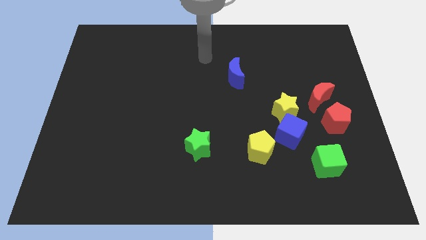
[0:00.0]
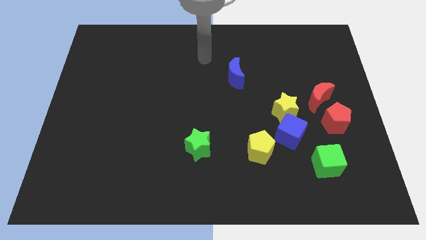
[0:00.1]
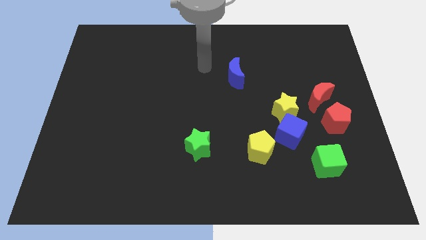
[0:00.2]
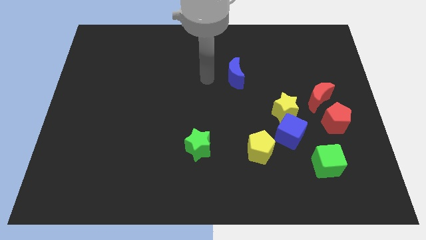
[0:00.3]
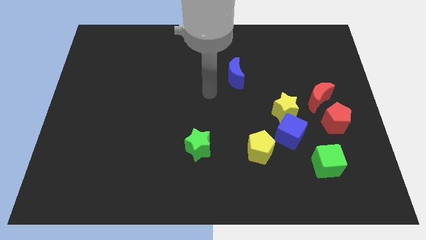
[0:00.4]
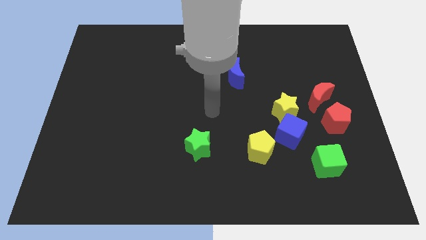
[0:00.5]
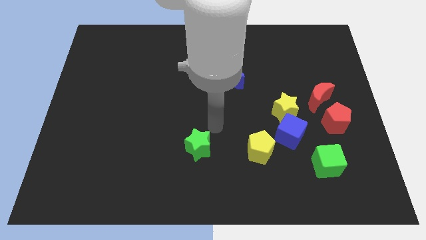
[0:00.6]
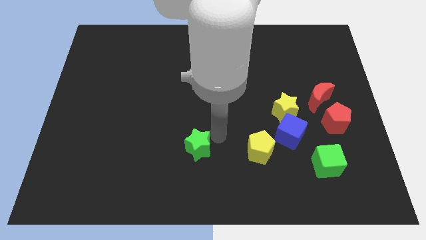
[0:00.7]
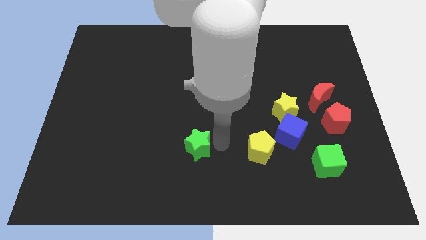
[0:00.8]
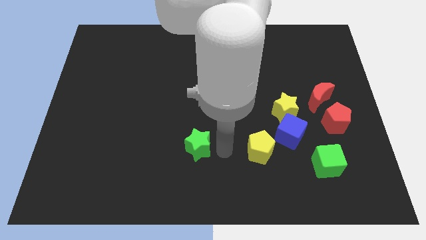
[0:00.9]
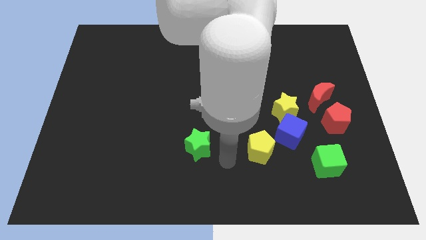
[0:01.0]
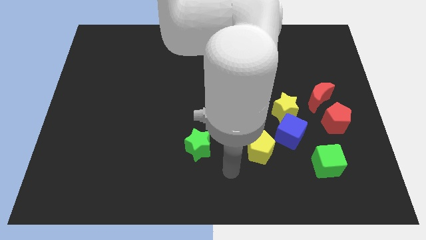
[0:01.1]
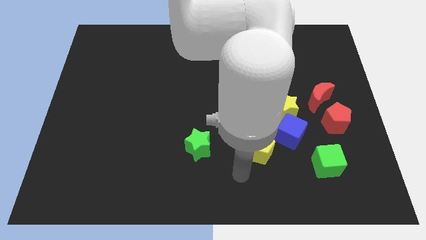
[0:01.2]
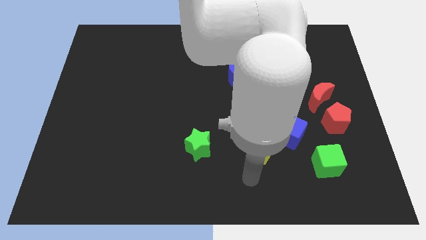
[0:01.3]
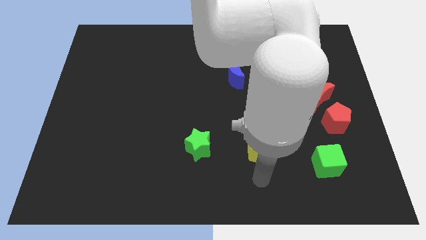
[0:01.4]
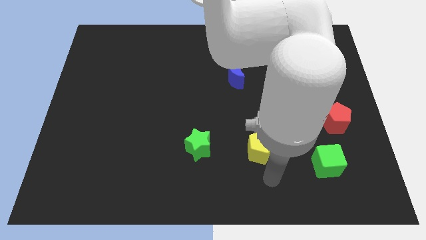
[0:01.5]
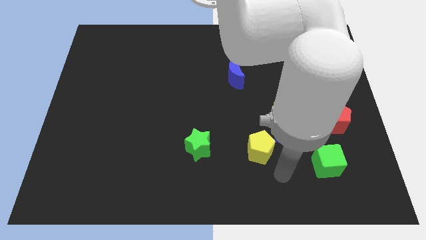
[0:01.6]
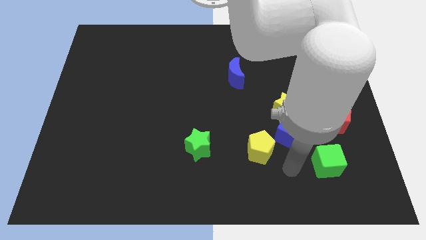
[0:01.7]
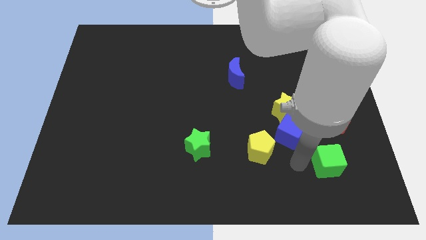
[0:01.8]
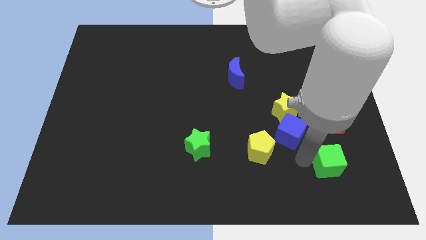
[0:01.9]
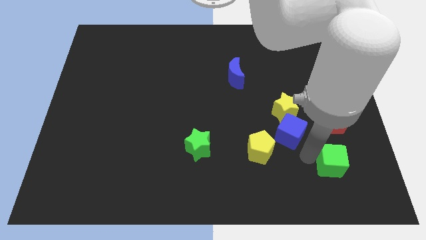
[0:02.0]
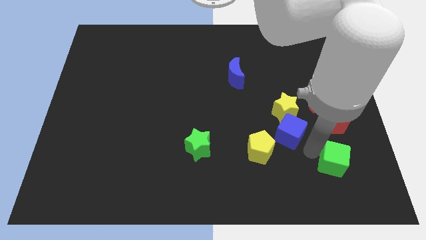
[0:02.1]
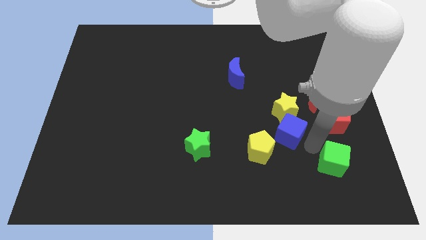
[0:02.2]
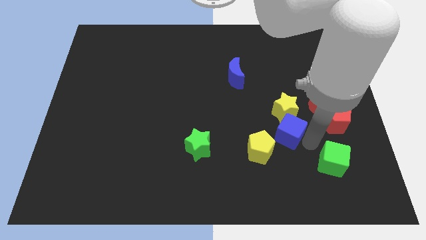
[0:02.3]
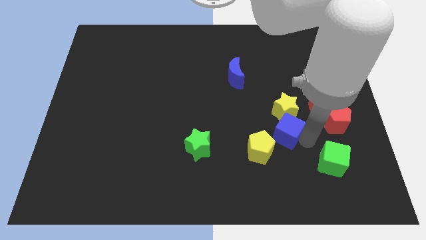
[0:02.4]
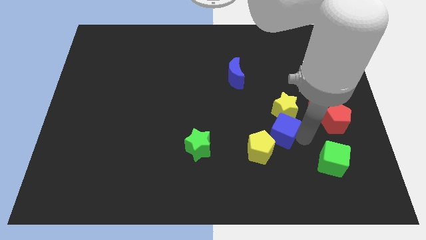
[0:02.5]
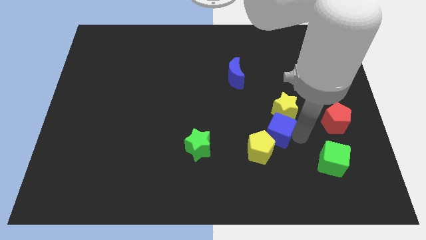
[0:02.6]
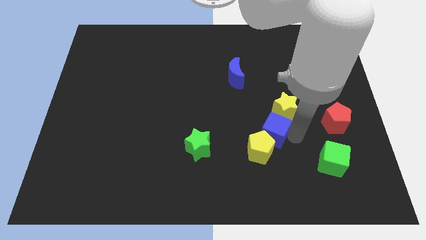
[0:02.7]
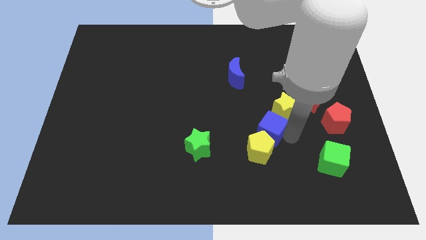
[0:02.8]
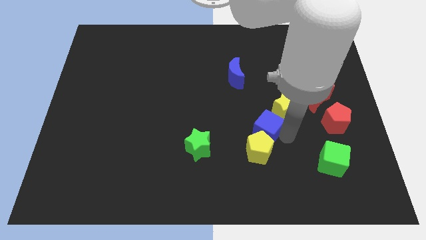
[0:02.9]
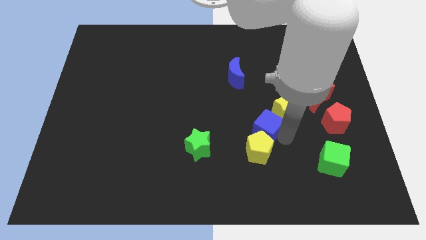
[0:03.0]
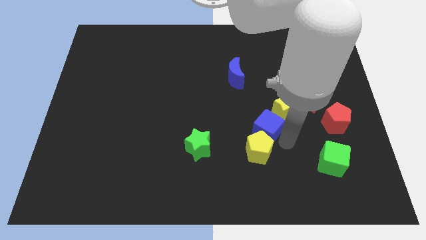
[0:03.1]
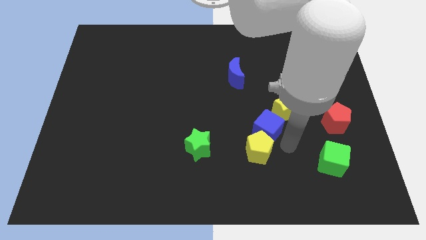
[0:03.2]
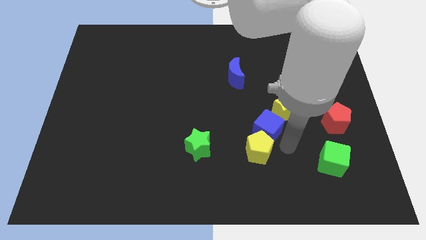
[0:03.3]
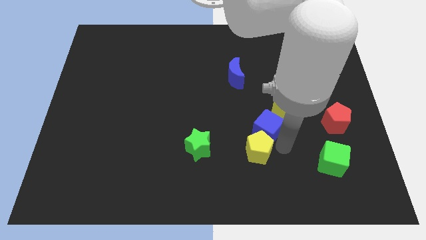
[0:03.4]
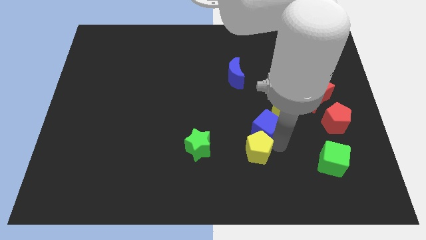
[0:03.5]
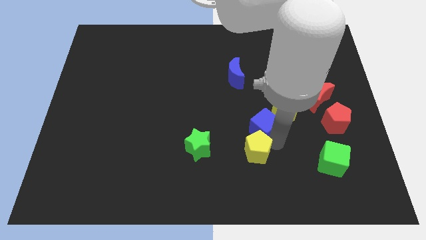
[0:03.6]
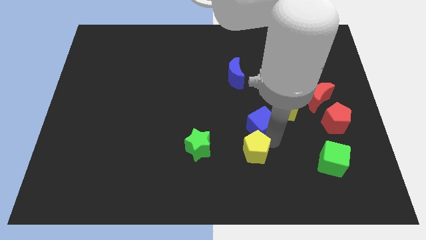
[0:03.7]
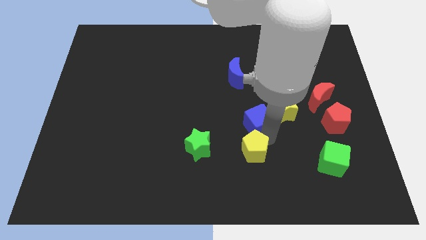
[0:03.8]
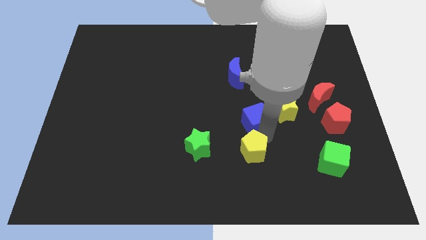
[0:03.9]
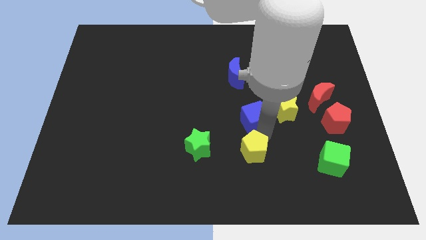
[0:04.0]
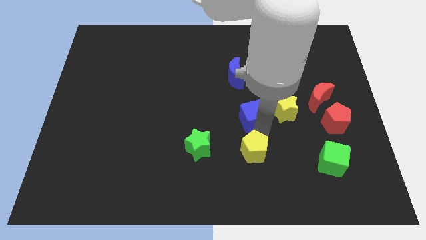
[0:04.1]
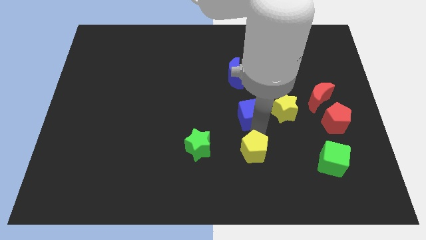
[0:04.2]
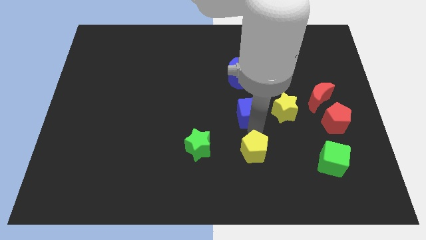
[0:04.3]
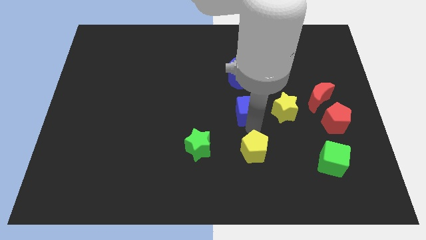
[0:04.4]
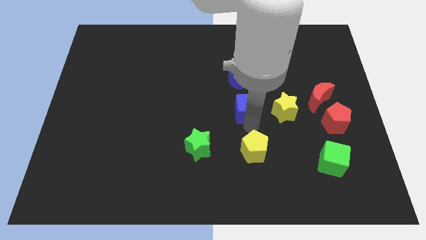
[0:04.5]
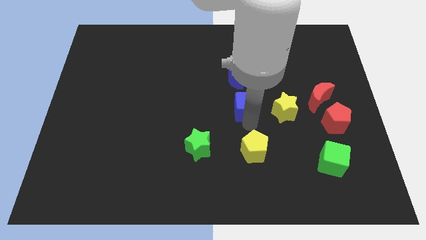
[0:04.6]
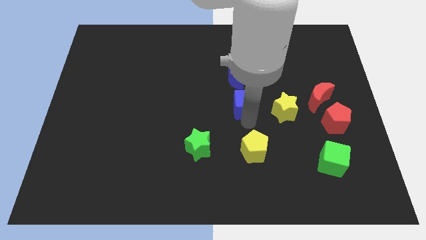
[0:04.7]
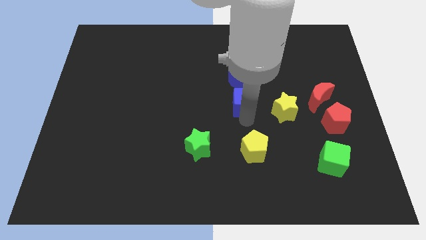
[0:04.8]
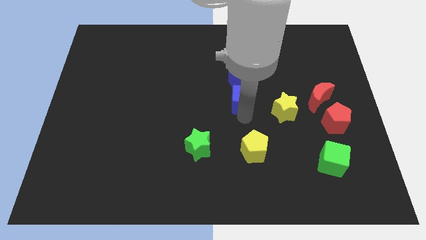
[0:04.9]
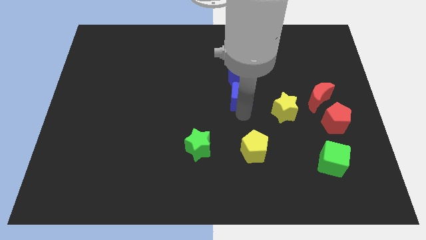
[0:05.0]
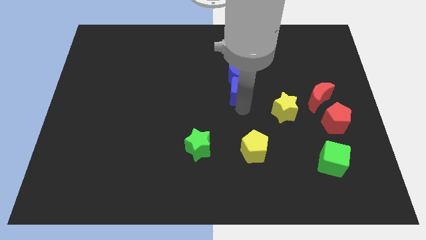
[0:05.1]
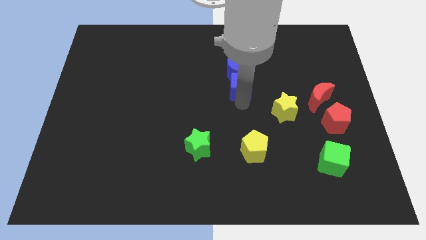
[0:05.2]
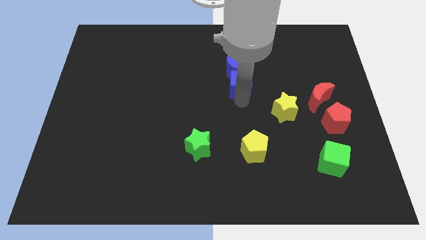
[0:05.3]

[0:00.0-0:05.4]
push the blue cube towards the blue moon

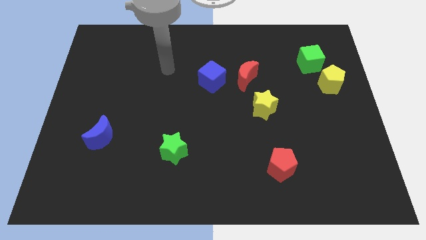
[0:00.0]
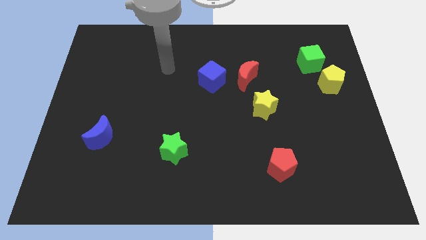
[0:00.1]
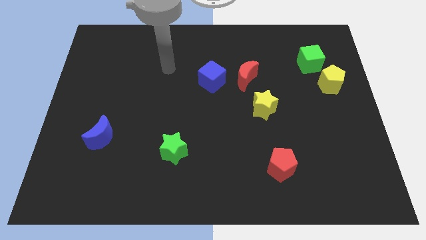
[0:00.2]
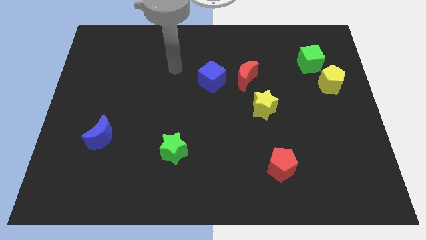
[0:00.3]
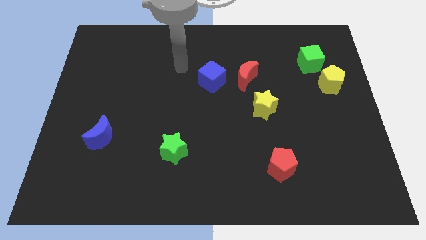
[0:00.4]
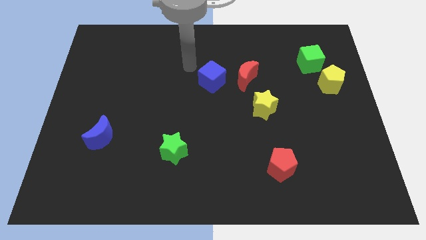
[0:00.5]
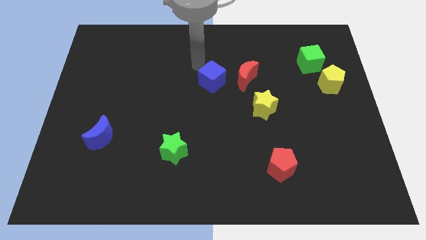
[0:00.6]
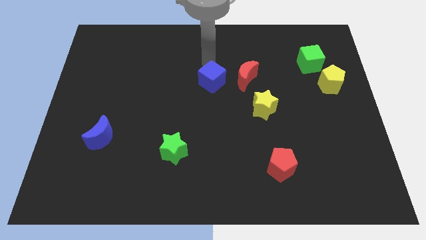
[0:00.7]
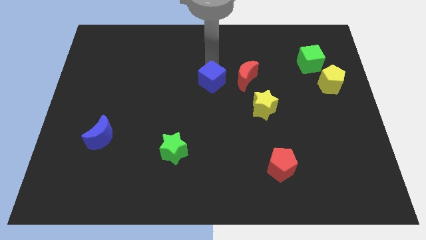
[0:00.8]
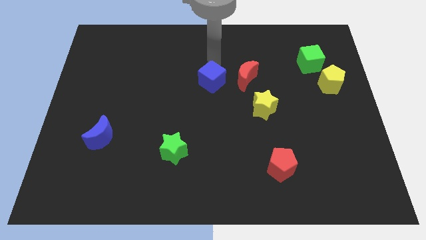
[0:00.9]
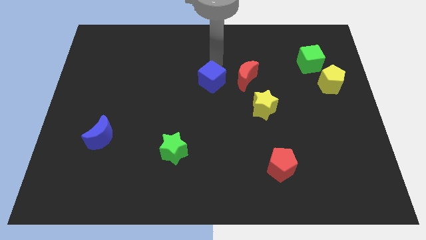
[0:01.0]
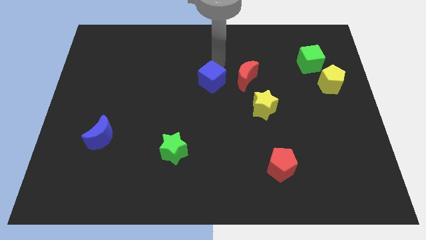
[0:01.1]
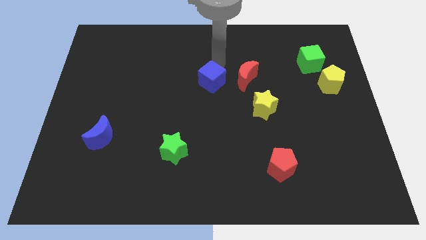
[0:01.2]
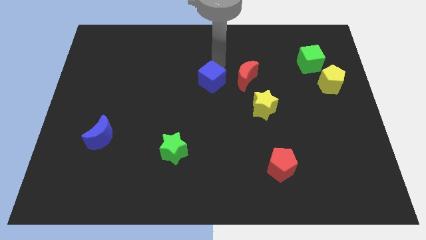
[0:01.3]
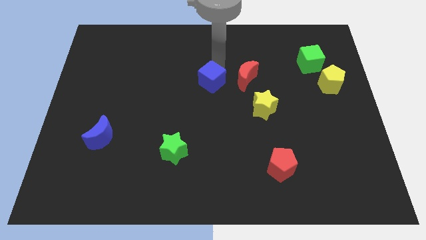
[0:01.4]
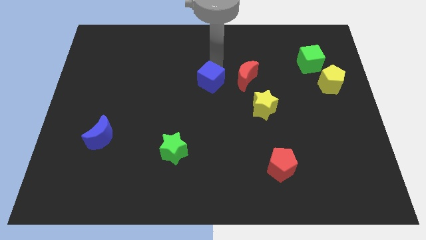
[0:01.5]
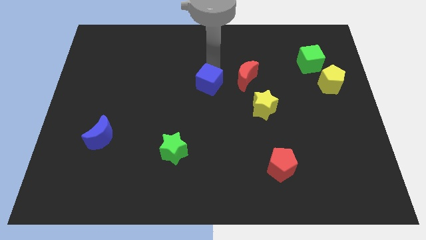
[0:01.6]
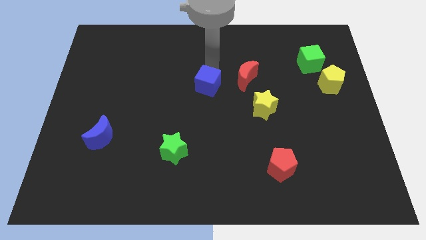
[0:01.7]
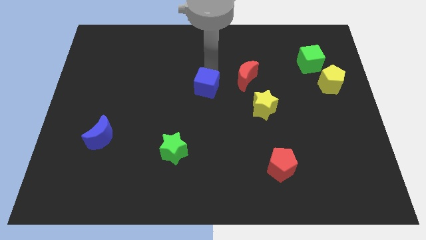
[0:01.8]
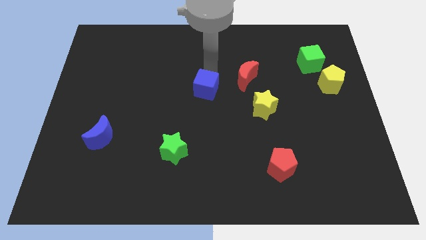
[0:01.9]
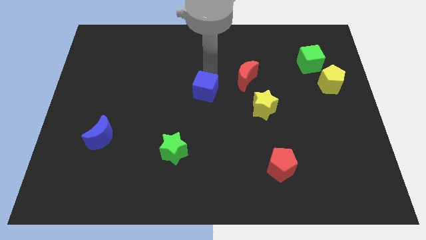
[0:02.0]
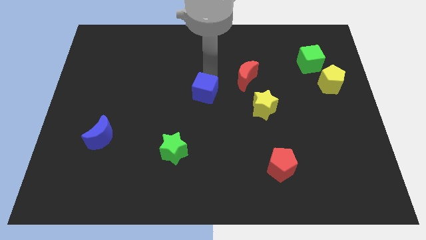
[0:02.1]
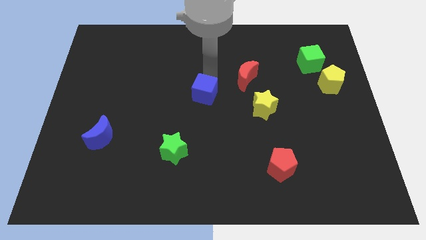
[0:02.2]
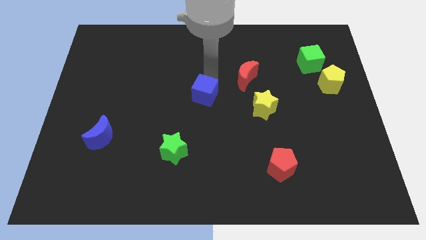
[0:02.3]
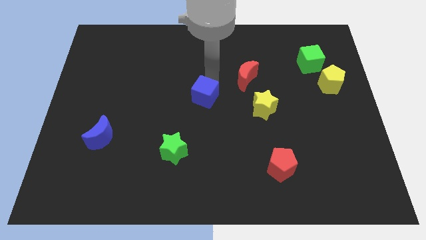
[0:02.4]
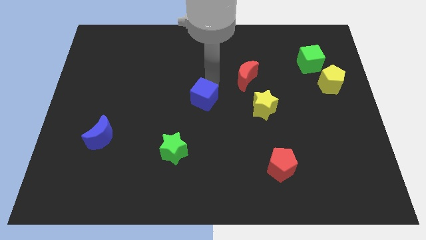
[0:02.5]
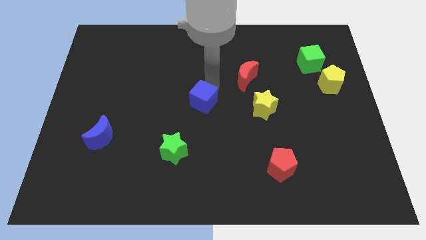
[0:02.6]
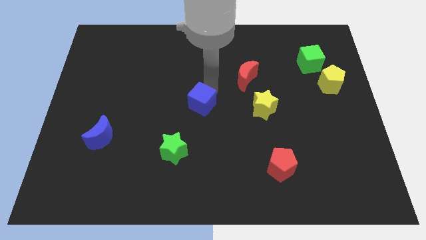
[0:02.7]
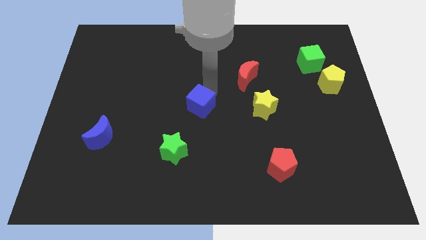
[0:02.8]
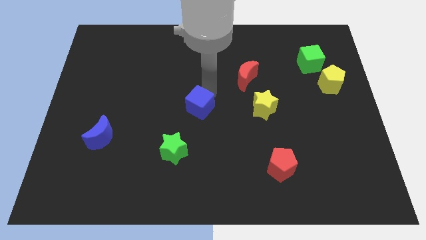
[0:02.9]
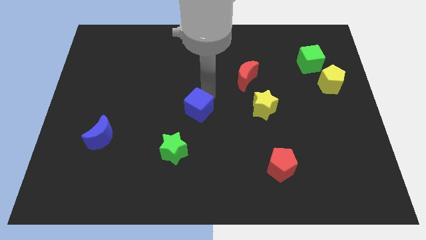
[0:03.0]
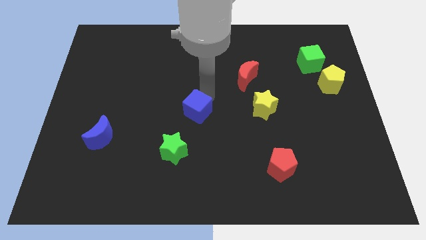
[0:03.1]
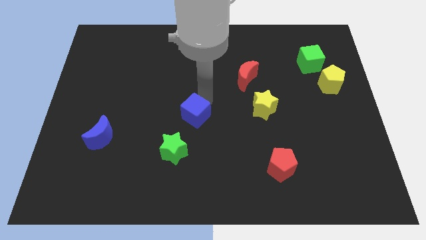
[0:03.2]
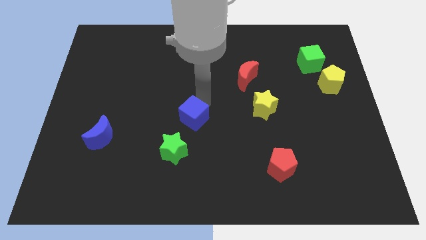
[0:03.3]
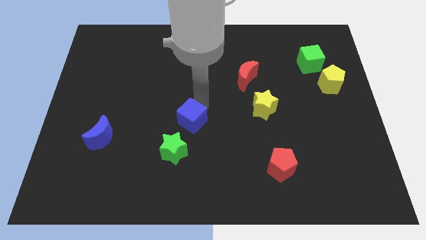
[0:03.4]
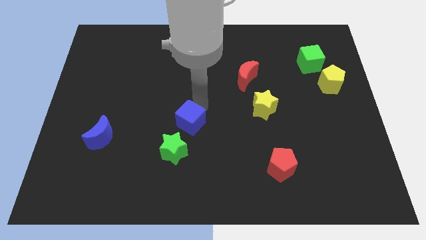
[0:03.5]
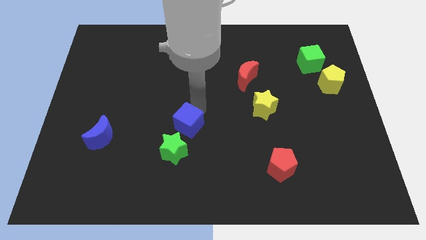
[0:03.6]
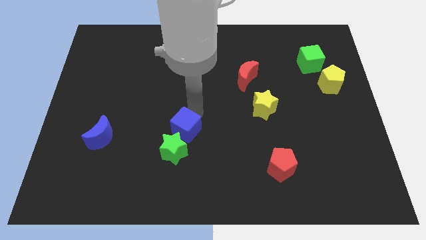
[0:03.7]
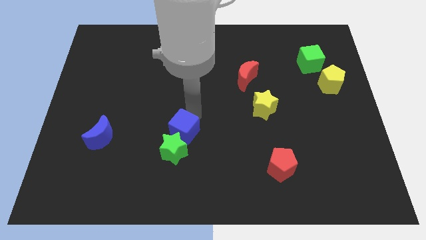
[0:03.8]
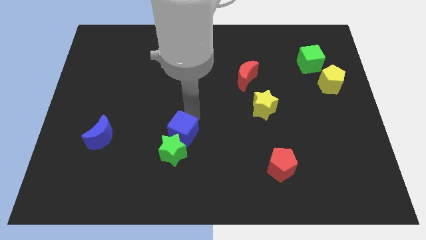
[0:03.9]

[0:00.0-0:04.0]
put the blue cube towards the green star
